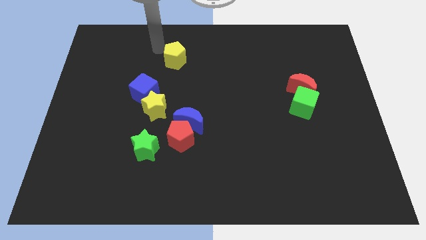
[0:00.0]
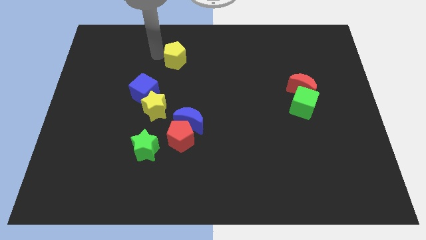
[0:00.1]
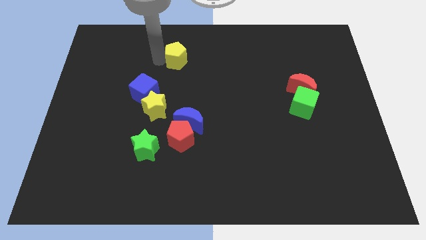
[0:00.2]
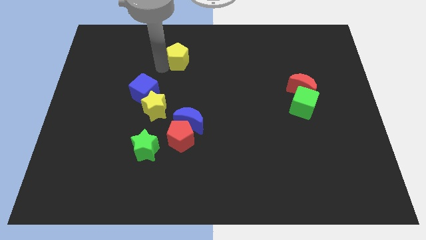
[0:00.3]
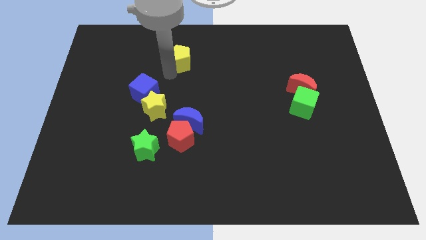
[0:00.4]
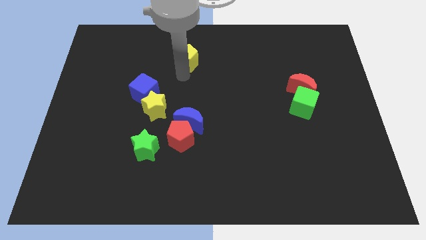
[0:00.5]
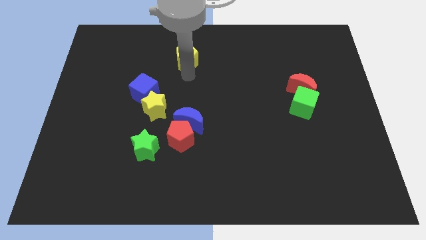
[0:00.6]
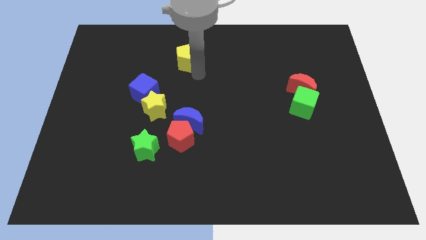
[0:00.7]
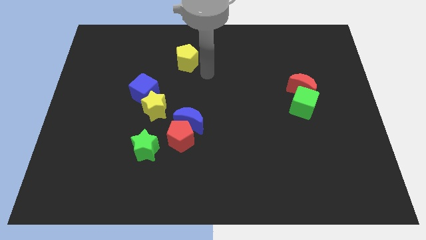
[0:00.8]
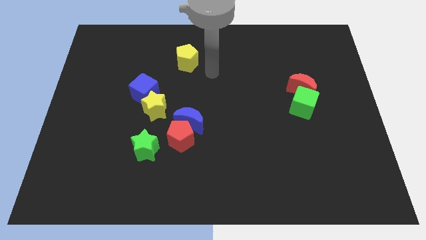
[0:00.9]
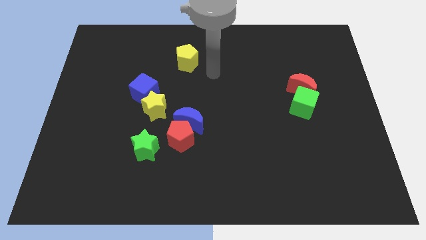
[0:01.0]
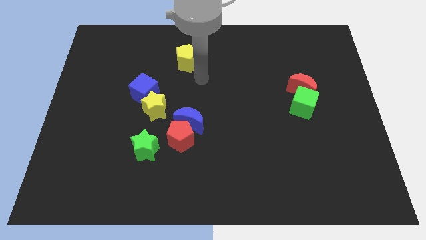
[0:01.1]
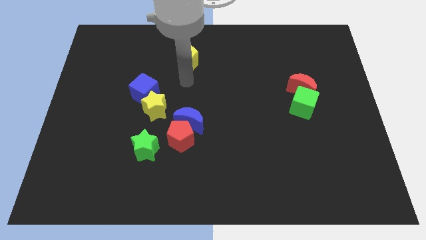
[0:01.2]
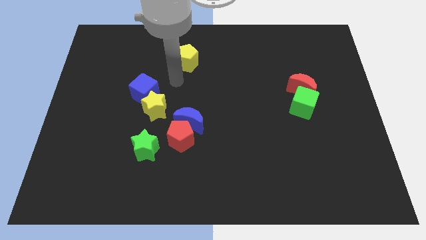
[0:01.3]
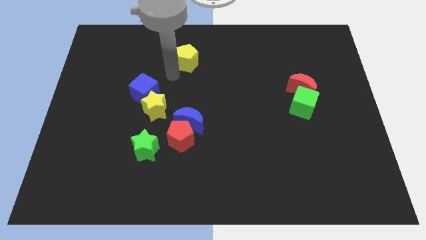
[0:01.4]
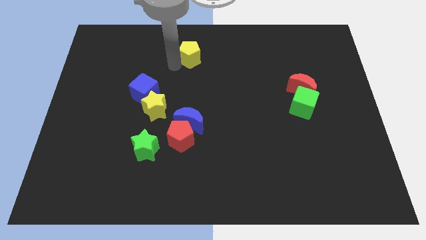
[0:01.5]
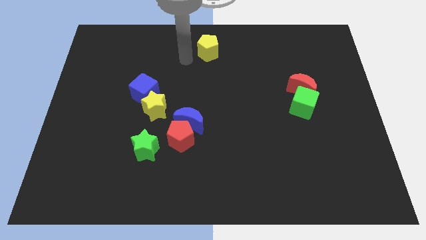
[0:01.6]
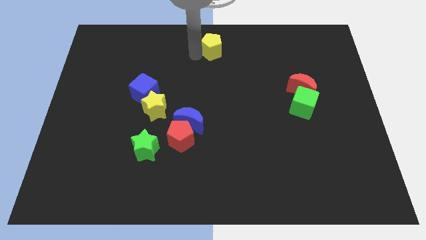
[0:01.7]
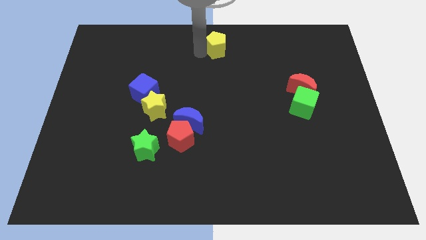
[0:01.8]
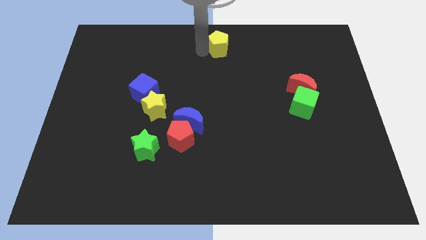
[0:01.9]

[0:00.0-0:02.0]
push the yellow pentagon towards the top

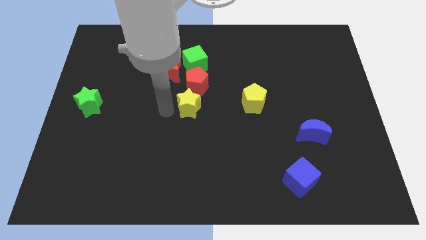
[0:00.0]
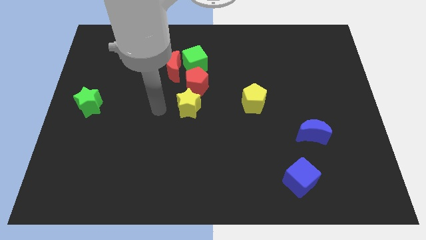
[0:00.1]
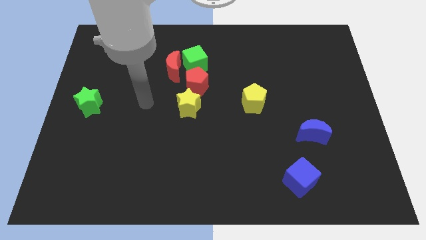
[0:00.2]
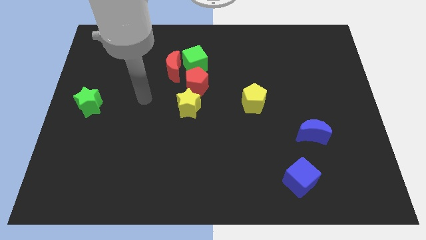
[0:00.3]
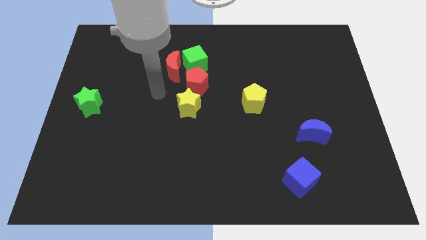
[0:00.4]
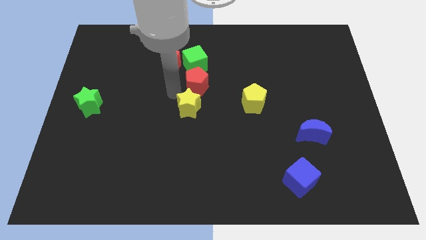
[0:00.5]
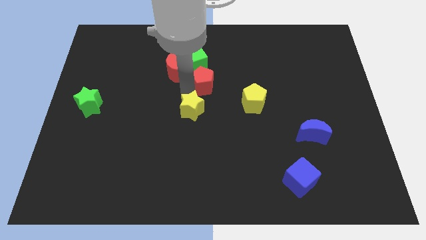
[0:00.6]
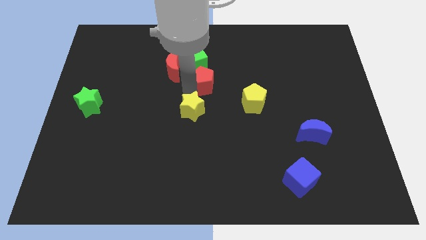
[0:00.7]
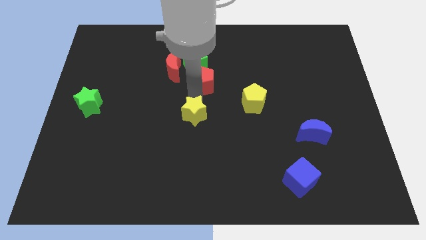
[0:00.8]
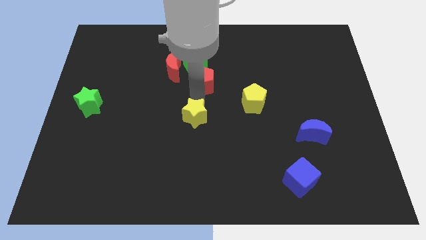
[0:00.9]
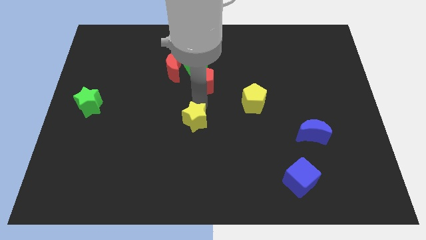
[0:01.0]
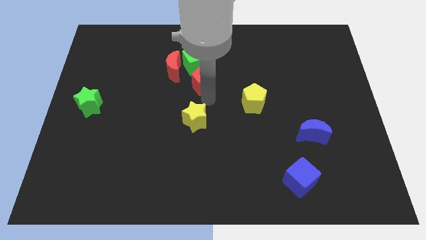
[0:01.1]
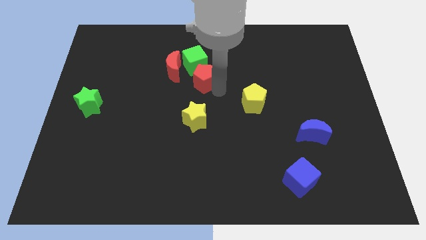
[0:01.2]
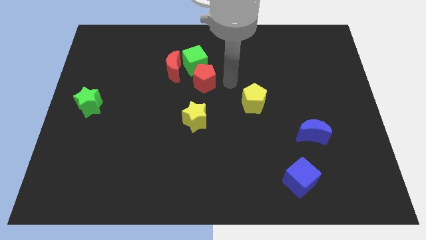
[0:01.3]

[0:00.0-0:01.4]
separate red pentagon and yellow star

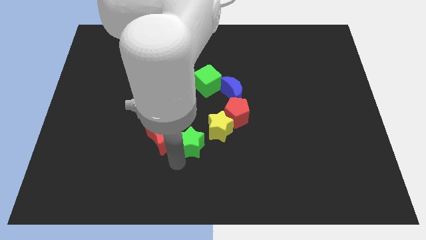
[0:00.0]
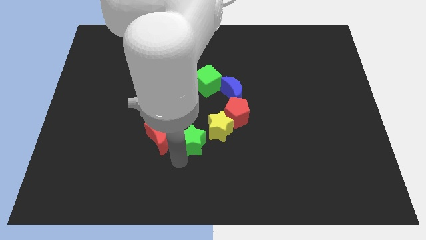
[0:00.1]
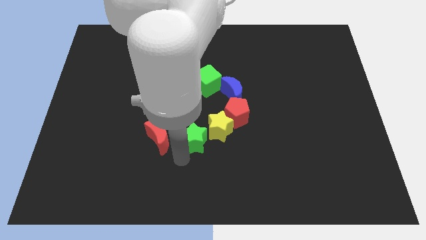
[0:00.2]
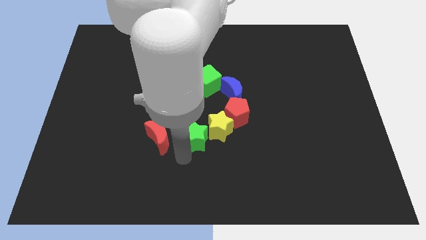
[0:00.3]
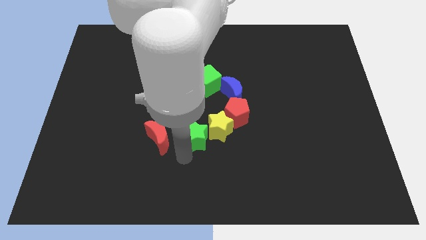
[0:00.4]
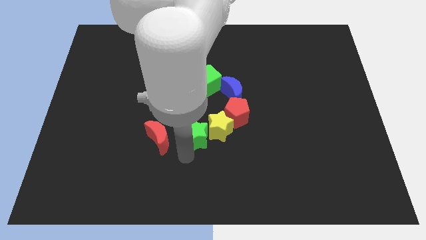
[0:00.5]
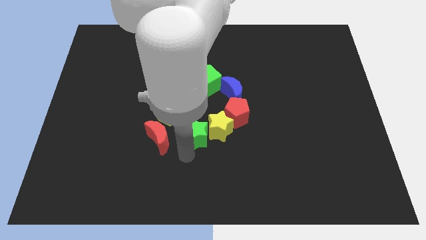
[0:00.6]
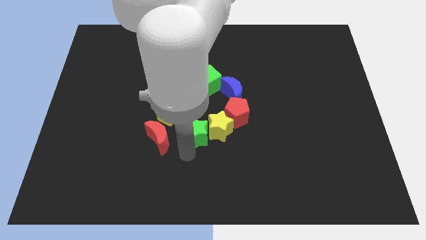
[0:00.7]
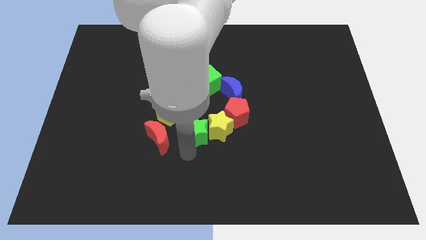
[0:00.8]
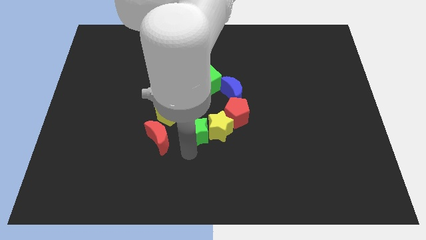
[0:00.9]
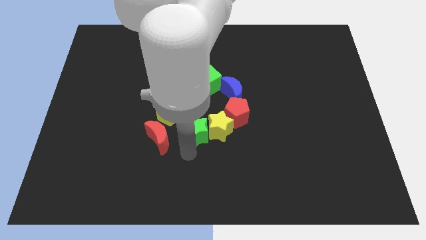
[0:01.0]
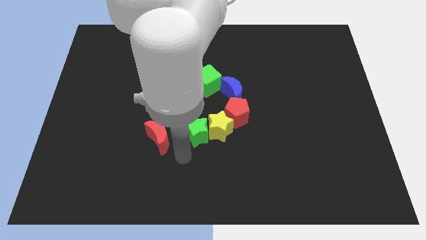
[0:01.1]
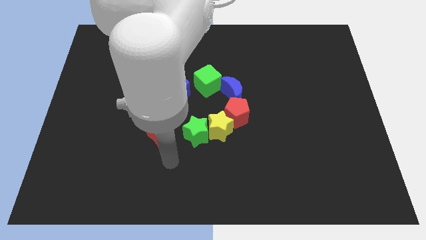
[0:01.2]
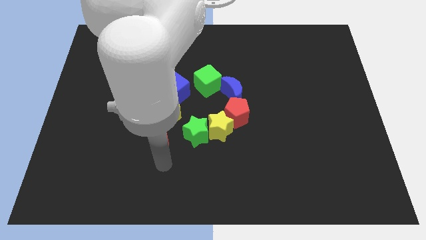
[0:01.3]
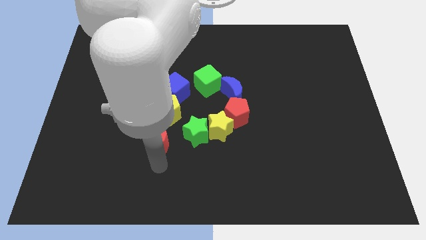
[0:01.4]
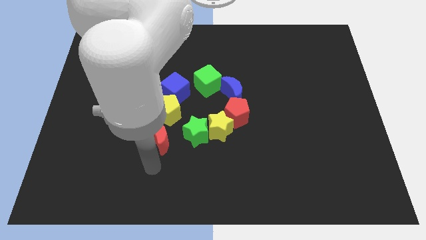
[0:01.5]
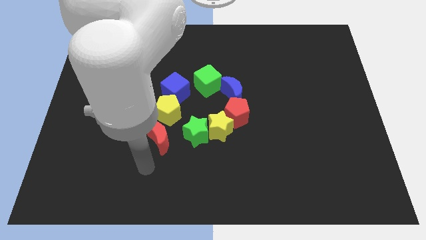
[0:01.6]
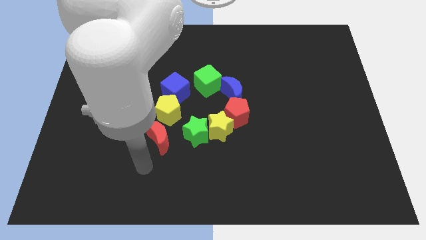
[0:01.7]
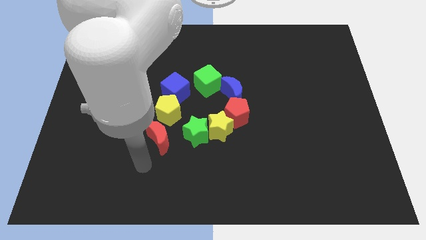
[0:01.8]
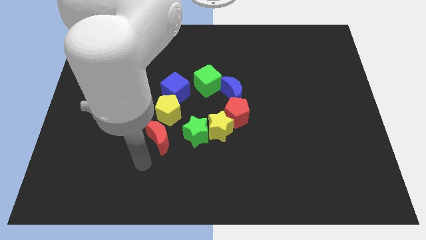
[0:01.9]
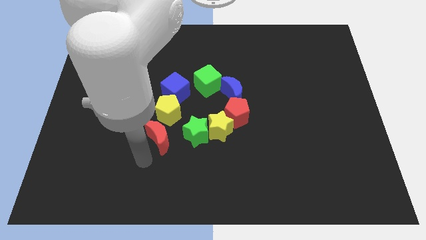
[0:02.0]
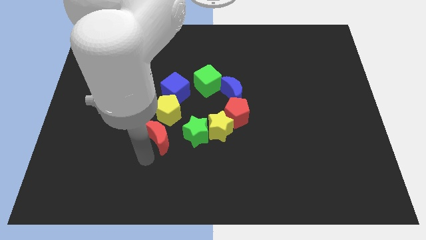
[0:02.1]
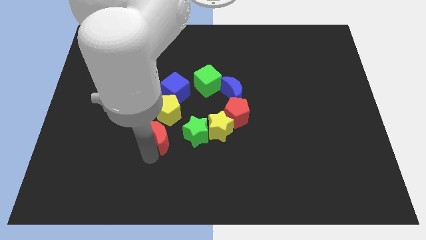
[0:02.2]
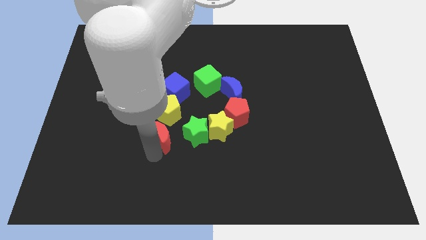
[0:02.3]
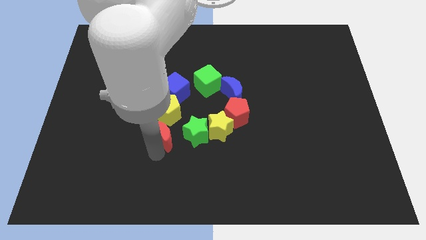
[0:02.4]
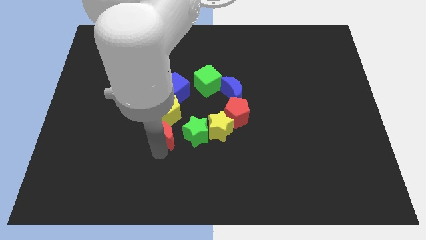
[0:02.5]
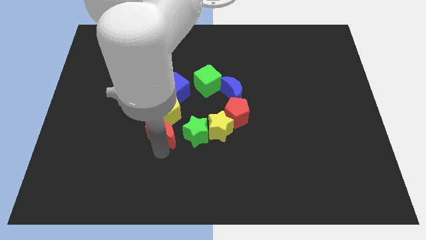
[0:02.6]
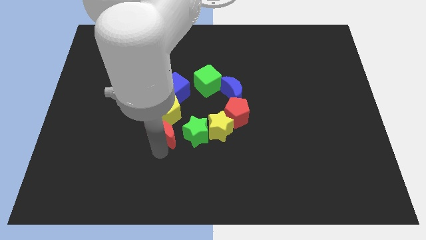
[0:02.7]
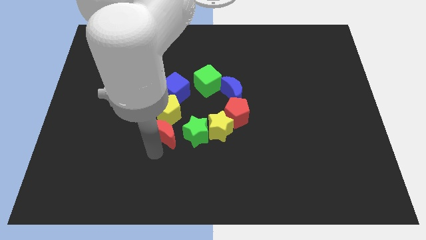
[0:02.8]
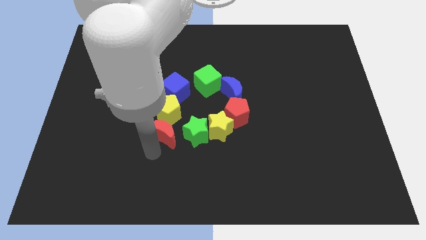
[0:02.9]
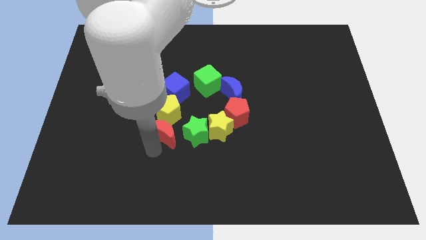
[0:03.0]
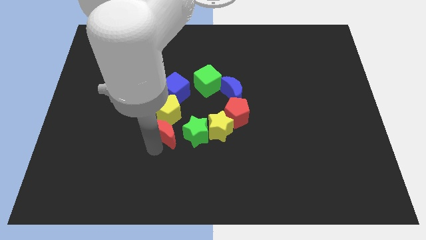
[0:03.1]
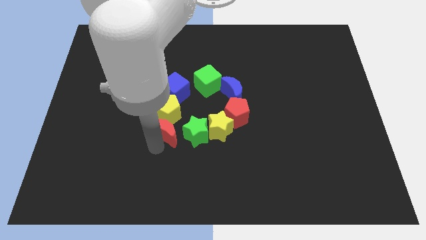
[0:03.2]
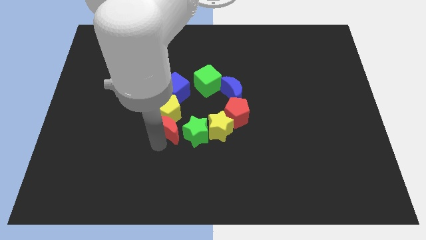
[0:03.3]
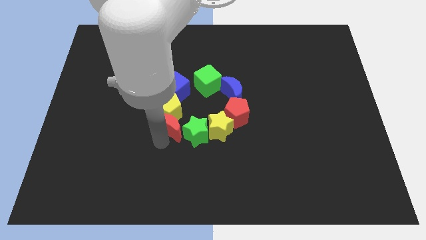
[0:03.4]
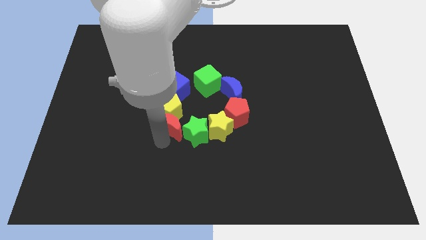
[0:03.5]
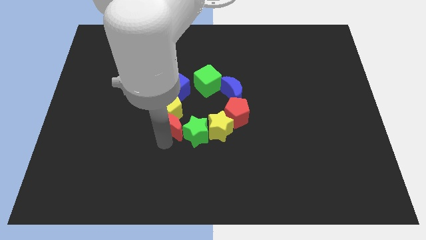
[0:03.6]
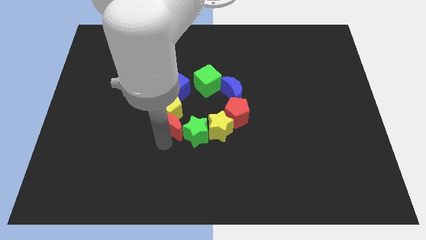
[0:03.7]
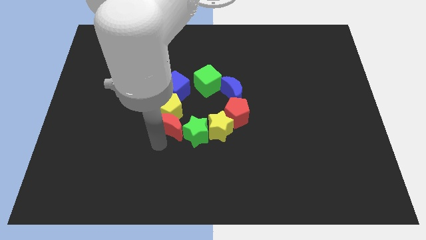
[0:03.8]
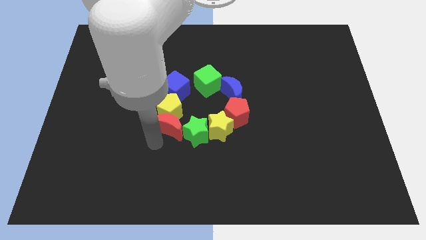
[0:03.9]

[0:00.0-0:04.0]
move the green star and red moon to the group of blocks to form a circle with all the blocks

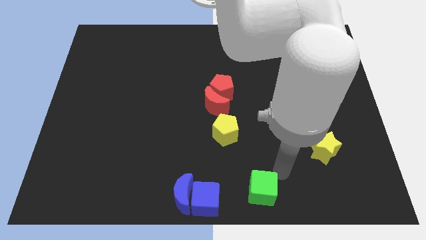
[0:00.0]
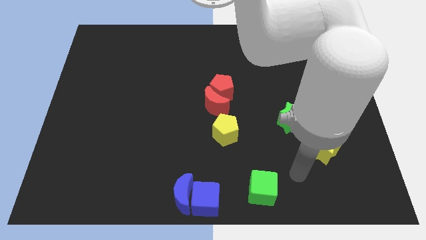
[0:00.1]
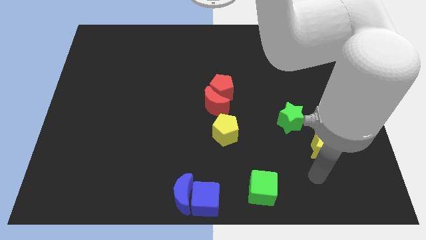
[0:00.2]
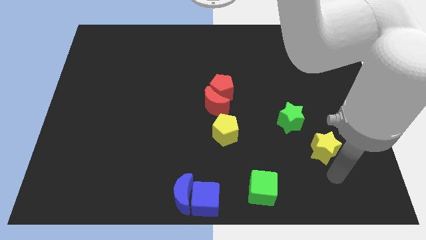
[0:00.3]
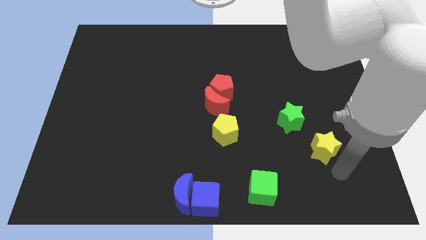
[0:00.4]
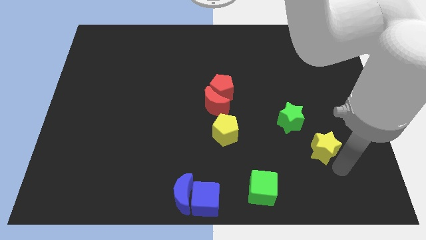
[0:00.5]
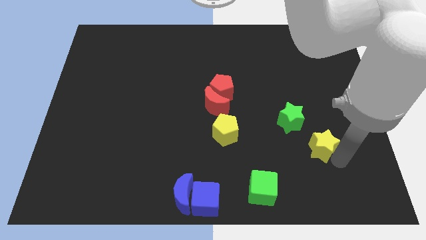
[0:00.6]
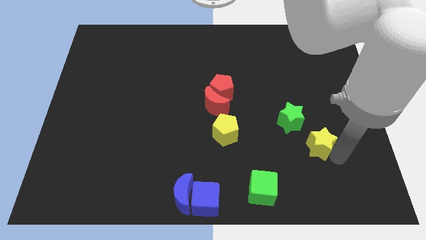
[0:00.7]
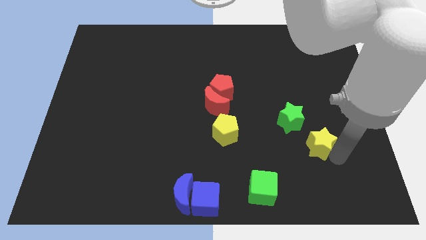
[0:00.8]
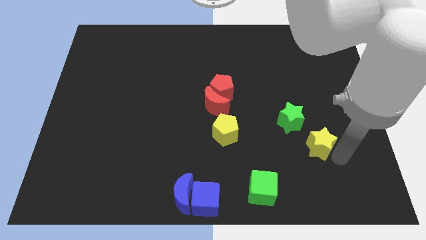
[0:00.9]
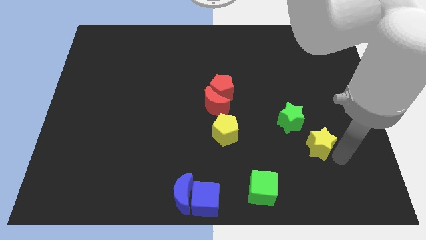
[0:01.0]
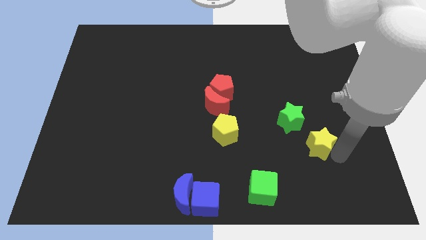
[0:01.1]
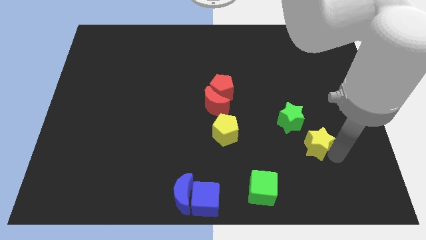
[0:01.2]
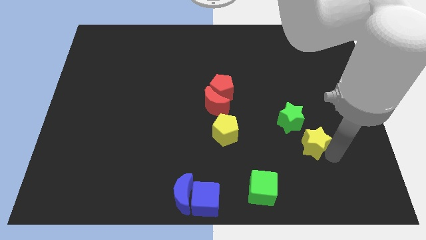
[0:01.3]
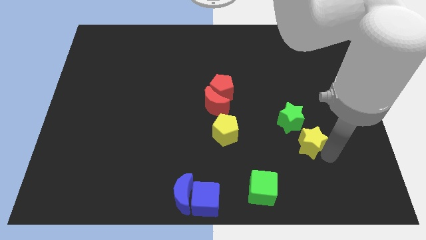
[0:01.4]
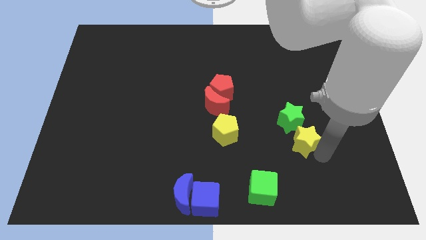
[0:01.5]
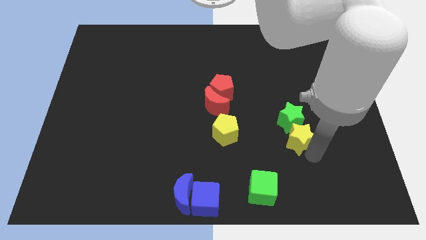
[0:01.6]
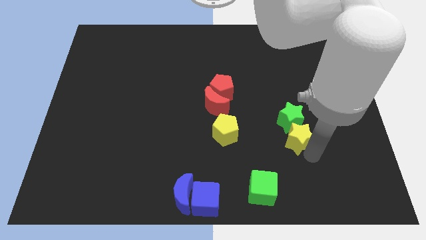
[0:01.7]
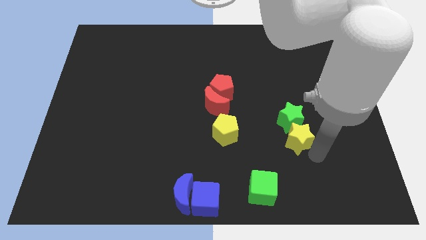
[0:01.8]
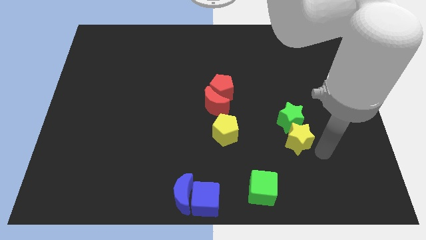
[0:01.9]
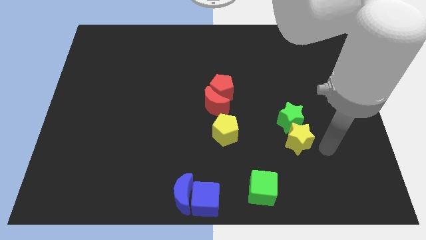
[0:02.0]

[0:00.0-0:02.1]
push the yellow star into the green star
